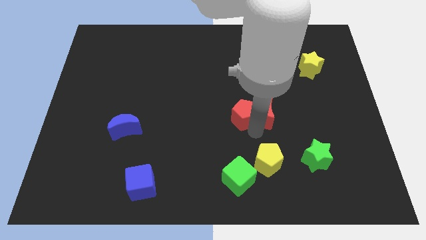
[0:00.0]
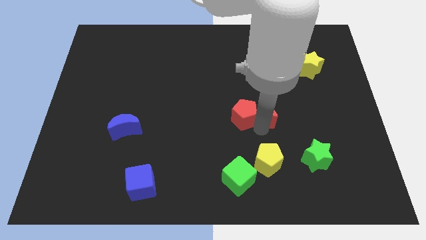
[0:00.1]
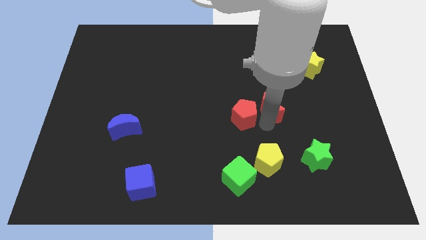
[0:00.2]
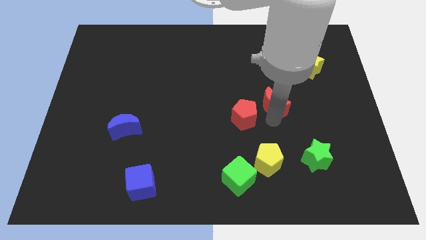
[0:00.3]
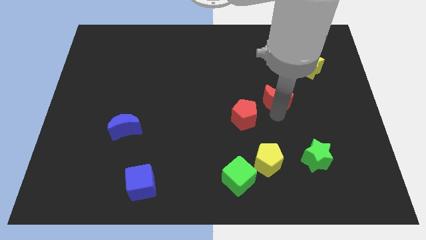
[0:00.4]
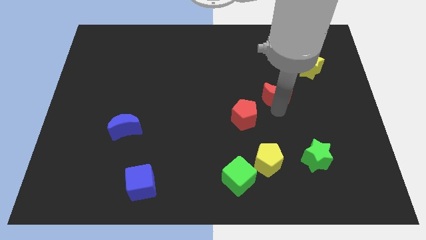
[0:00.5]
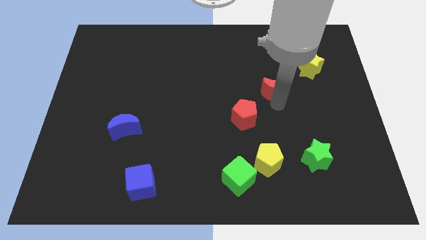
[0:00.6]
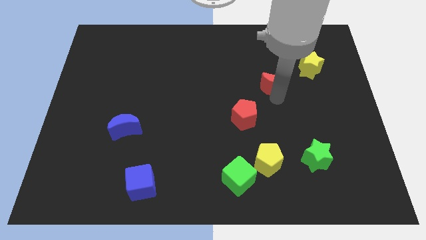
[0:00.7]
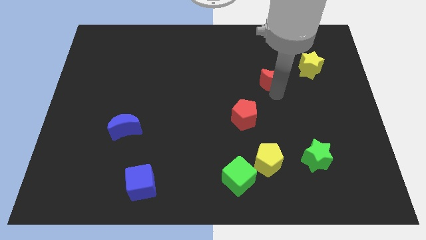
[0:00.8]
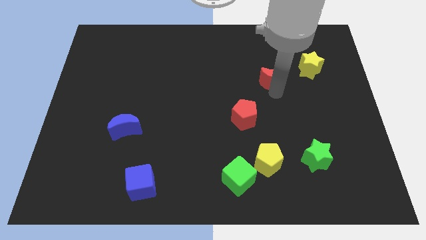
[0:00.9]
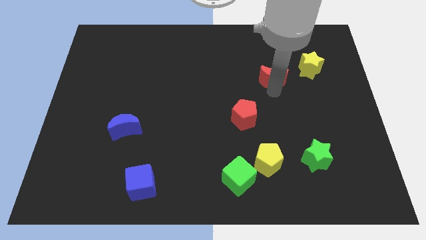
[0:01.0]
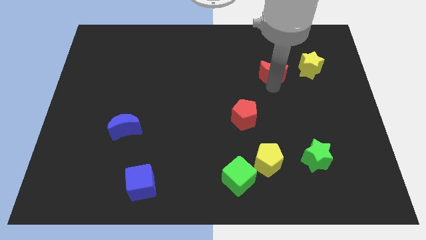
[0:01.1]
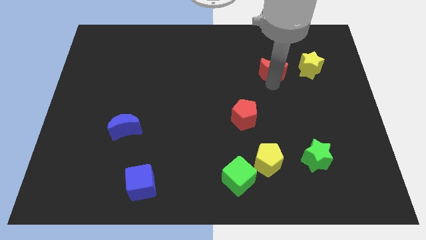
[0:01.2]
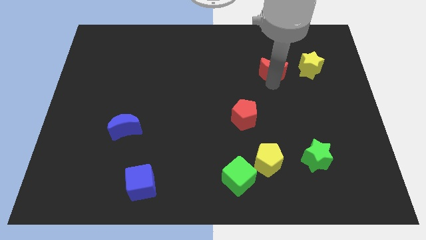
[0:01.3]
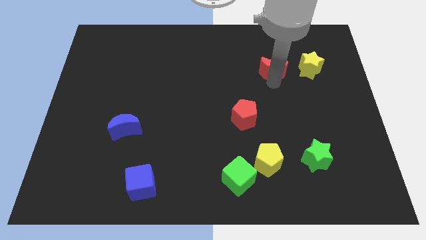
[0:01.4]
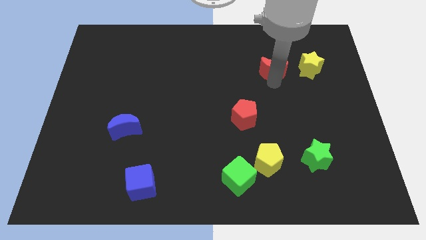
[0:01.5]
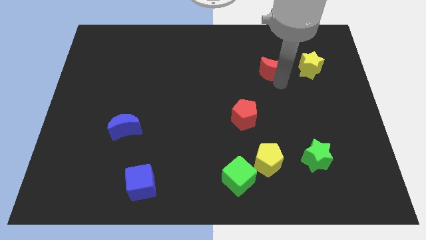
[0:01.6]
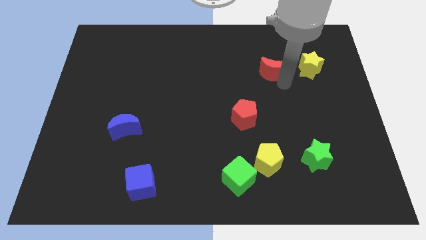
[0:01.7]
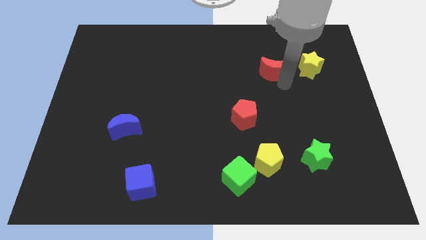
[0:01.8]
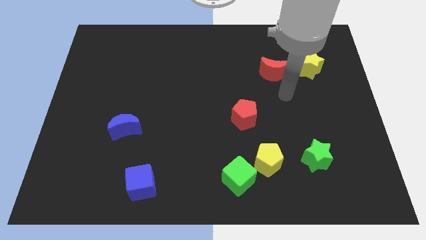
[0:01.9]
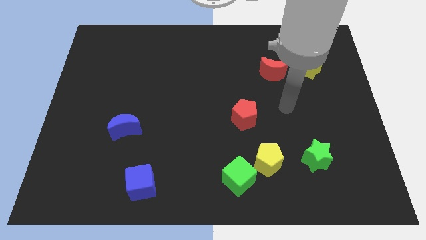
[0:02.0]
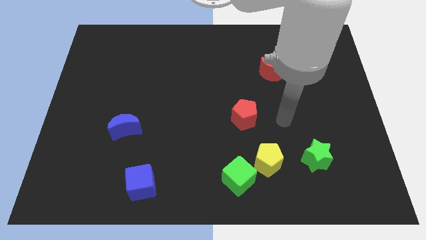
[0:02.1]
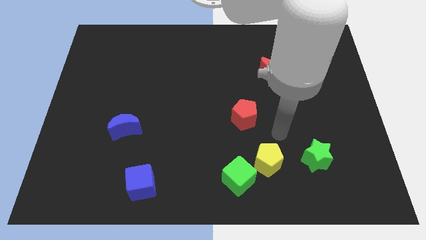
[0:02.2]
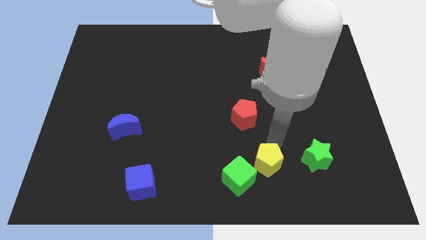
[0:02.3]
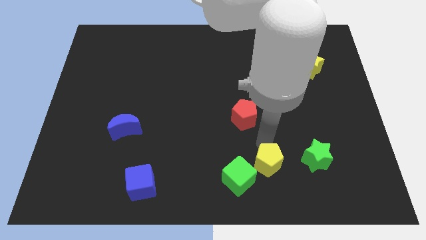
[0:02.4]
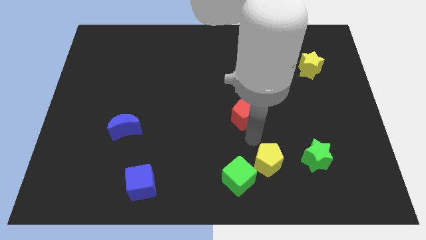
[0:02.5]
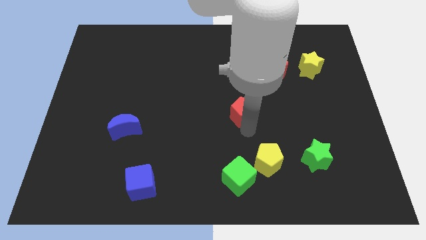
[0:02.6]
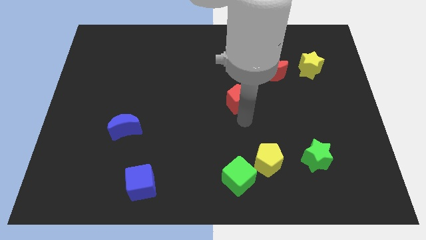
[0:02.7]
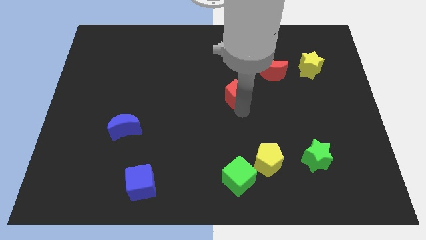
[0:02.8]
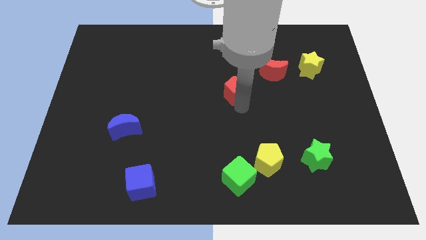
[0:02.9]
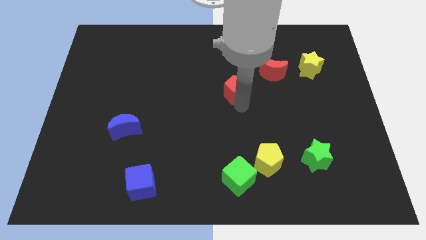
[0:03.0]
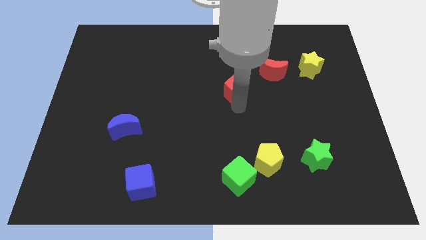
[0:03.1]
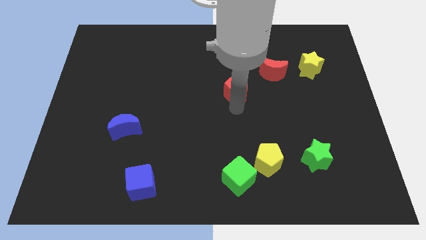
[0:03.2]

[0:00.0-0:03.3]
push the red pentagon after the red crescent

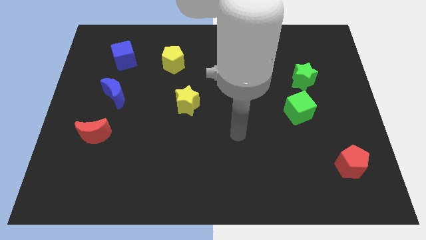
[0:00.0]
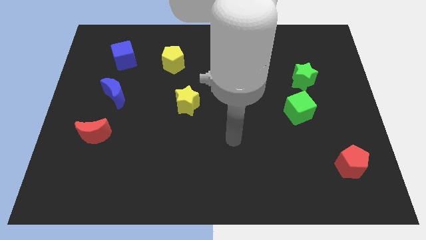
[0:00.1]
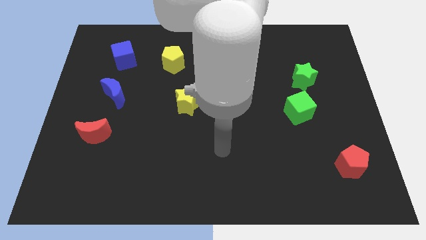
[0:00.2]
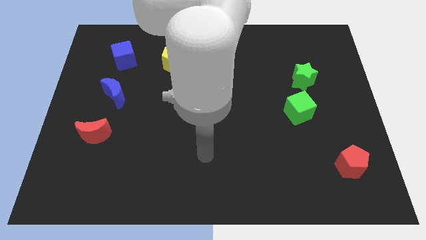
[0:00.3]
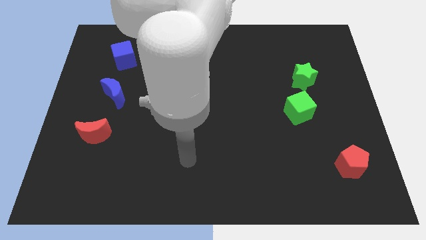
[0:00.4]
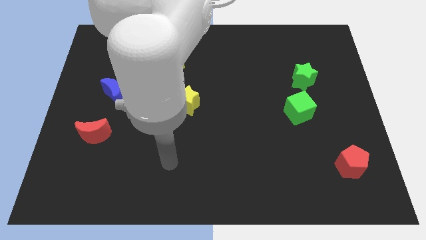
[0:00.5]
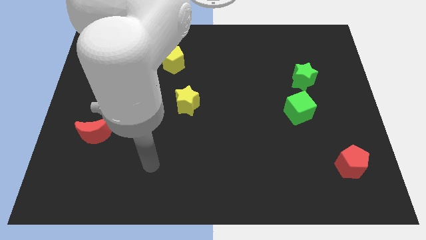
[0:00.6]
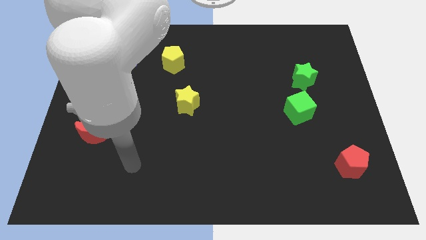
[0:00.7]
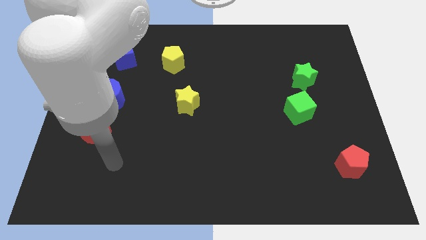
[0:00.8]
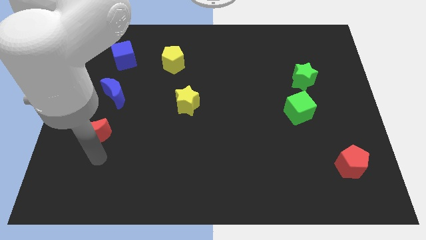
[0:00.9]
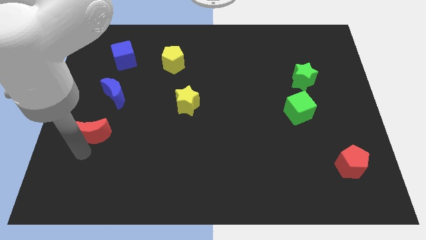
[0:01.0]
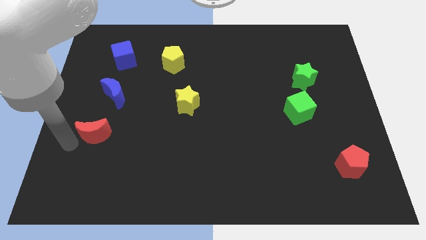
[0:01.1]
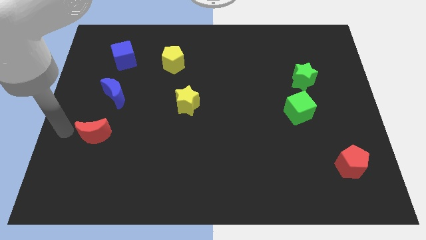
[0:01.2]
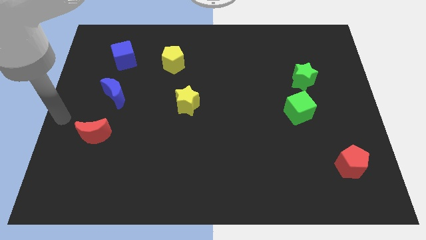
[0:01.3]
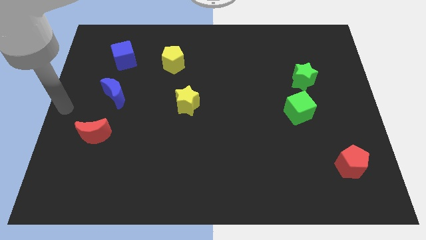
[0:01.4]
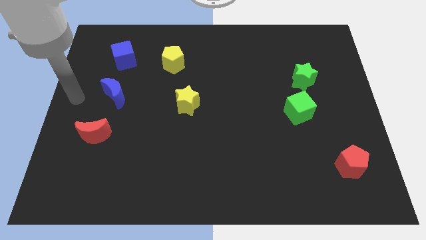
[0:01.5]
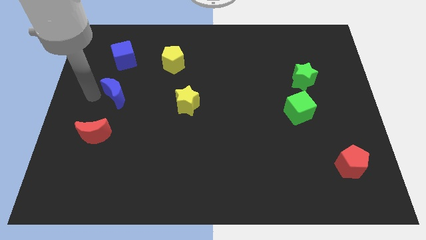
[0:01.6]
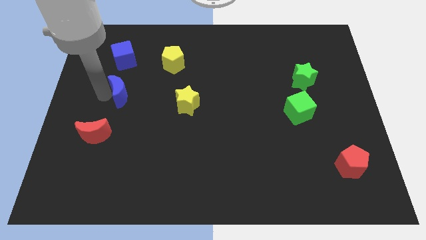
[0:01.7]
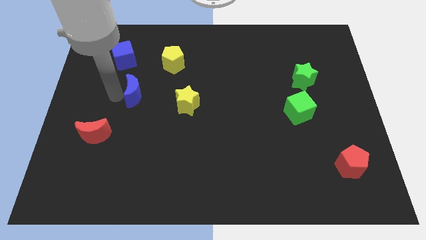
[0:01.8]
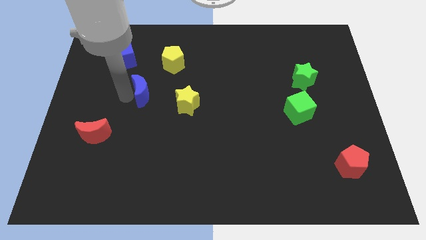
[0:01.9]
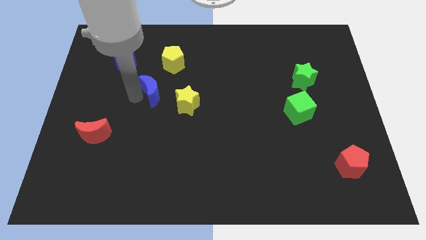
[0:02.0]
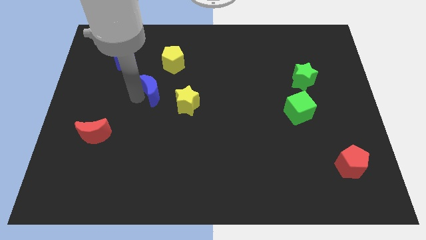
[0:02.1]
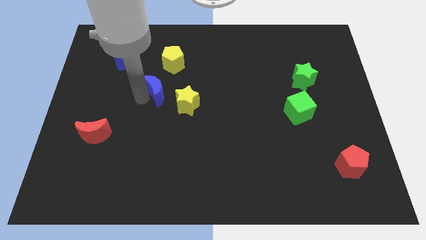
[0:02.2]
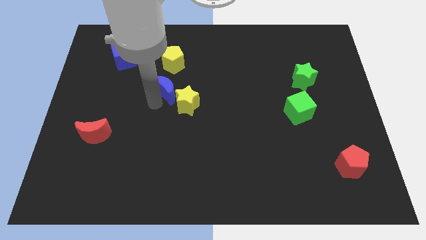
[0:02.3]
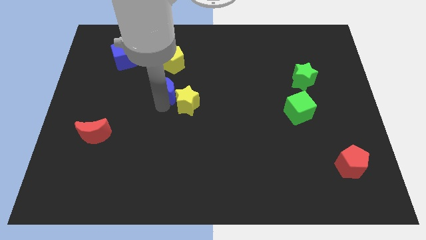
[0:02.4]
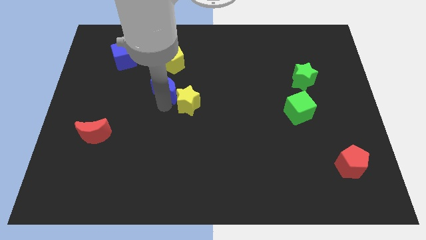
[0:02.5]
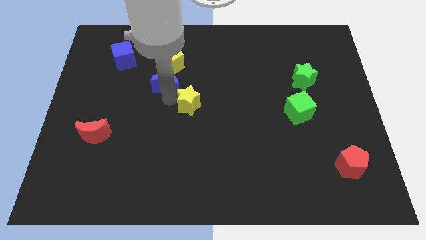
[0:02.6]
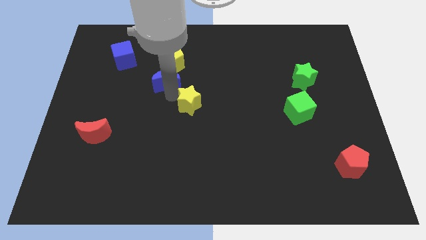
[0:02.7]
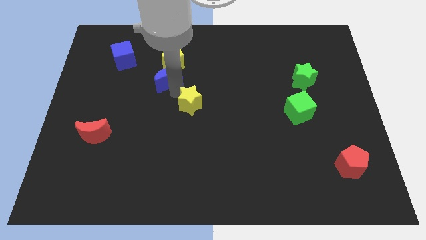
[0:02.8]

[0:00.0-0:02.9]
place blue blocks in between the yellow star and yellow pentagon

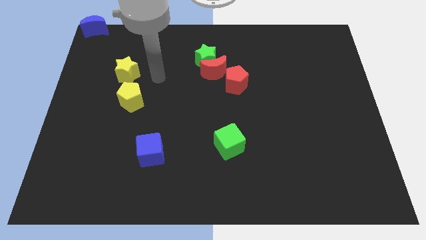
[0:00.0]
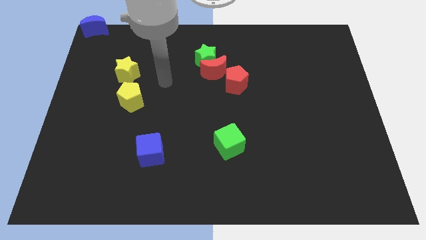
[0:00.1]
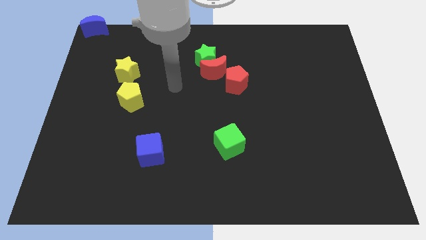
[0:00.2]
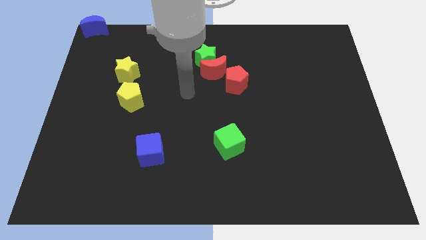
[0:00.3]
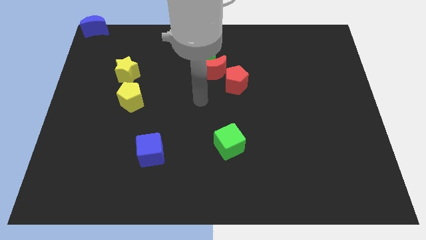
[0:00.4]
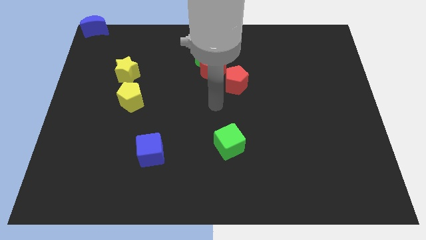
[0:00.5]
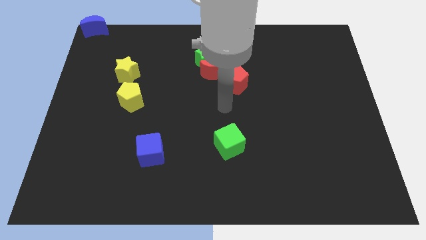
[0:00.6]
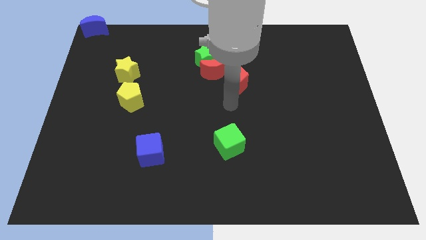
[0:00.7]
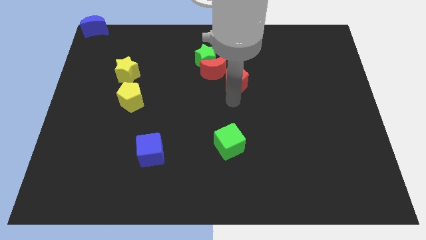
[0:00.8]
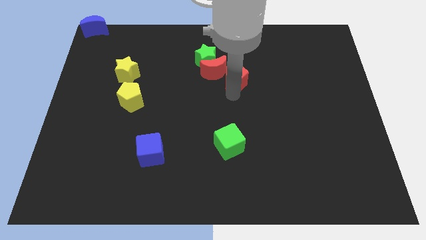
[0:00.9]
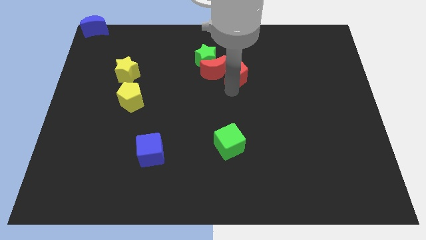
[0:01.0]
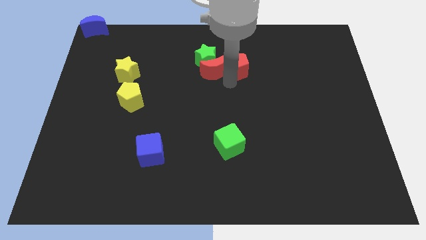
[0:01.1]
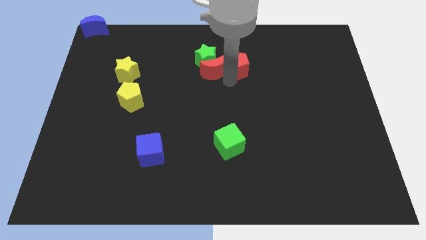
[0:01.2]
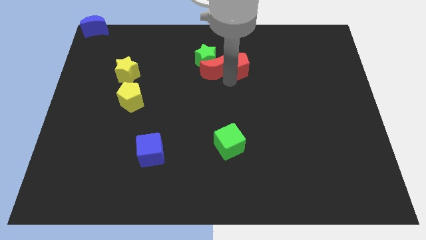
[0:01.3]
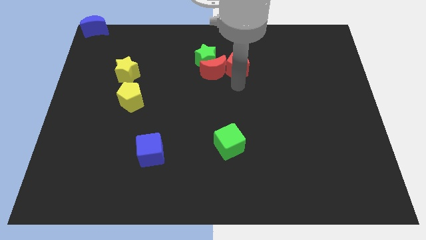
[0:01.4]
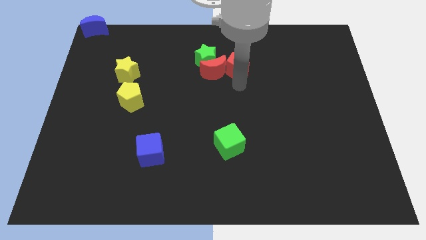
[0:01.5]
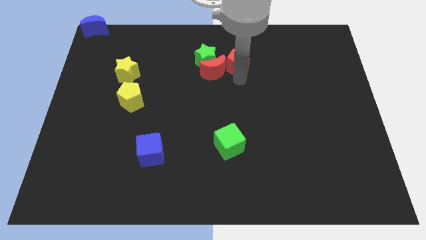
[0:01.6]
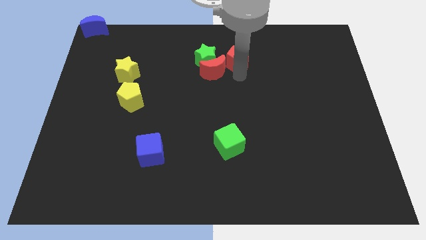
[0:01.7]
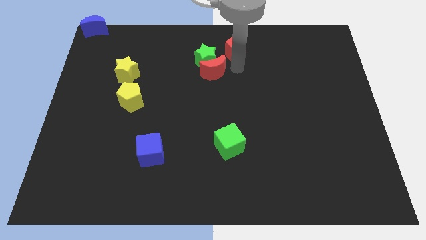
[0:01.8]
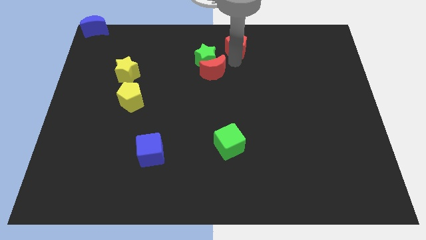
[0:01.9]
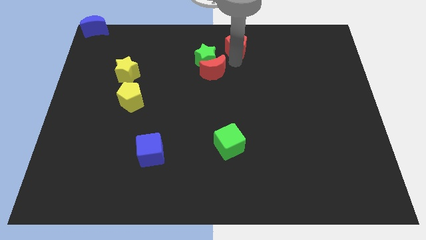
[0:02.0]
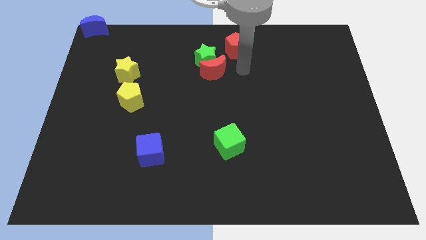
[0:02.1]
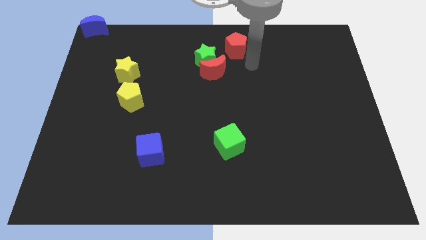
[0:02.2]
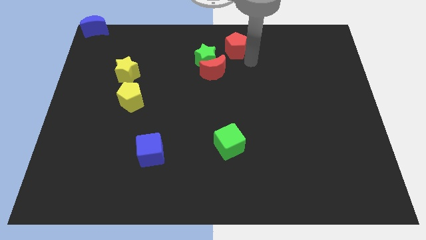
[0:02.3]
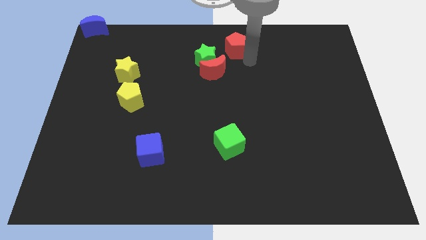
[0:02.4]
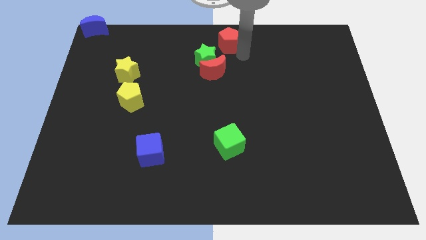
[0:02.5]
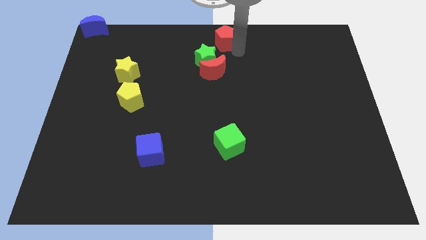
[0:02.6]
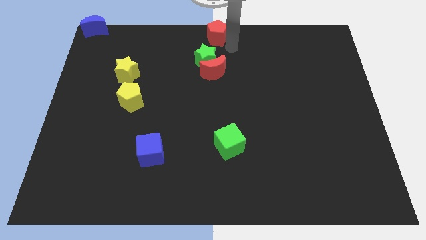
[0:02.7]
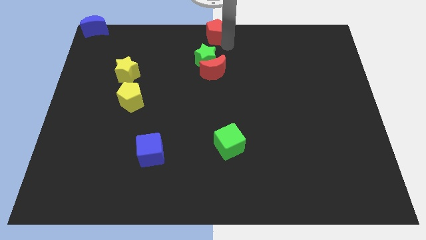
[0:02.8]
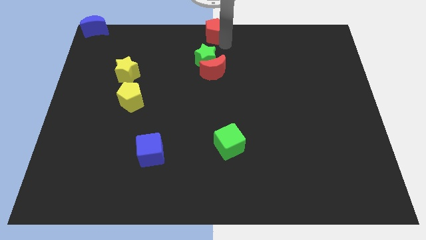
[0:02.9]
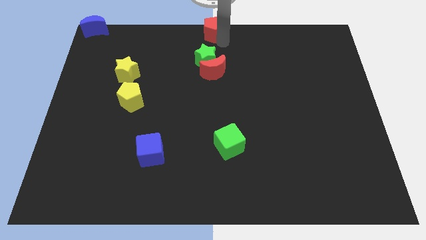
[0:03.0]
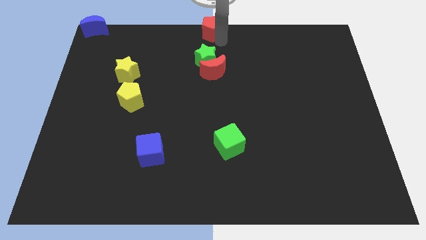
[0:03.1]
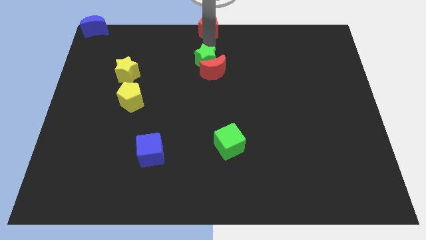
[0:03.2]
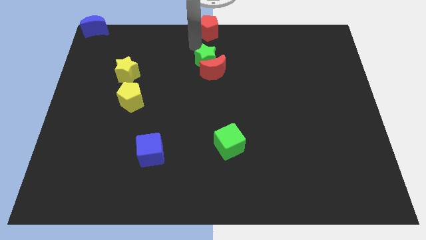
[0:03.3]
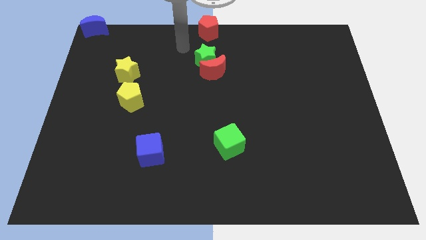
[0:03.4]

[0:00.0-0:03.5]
separate the red pentagon from the red moon
